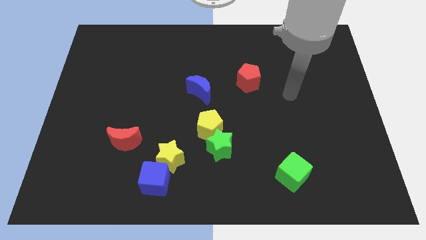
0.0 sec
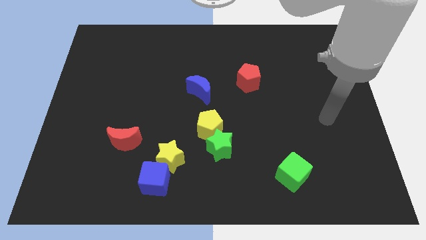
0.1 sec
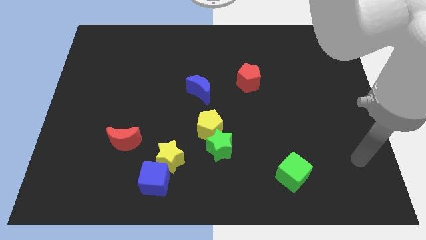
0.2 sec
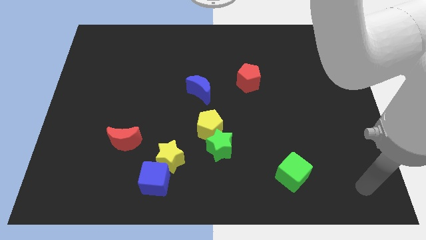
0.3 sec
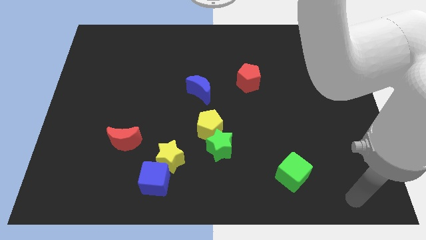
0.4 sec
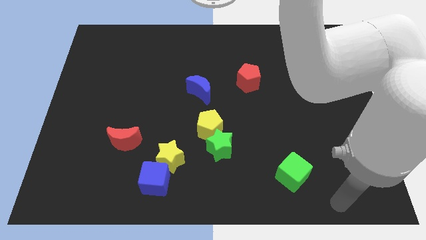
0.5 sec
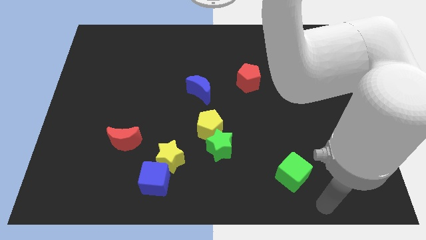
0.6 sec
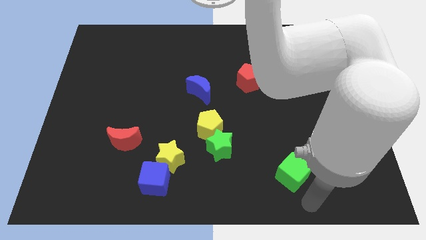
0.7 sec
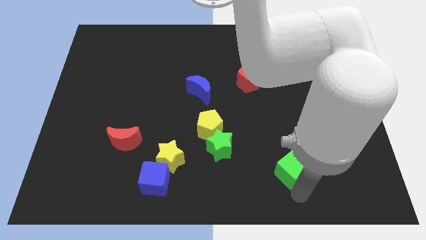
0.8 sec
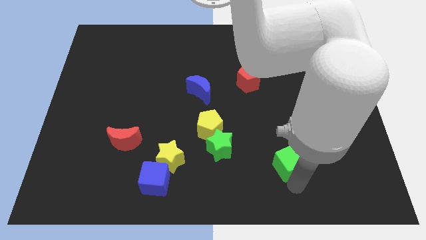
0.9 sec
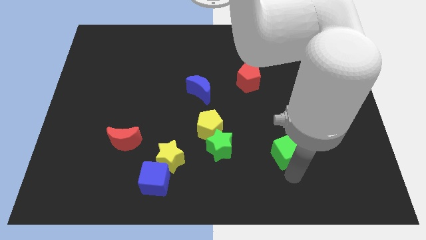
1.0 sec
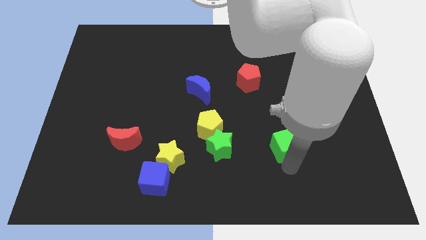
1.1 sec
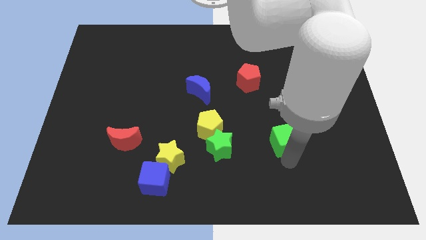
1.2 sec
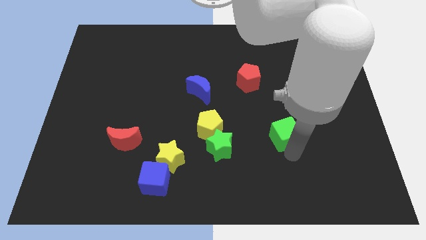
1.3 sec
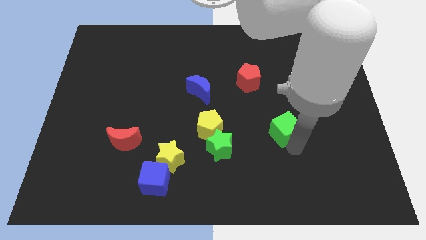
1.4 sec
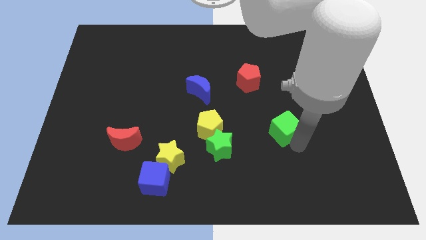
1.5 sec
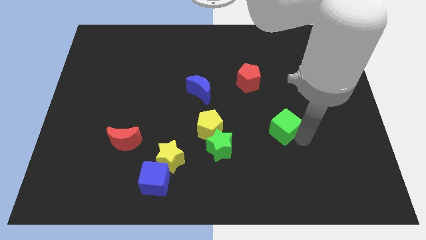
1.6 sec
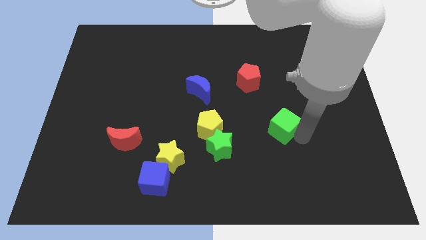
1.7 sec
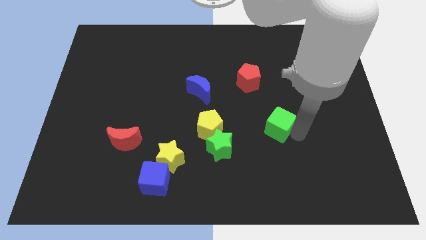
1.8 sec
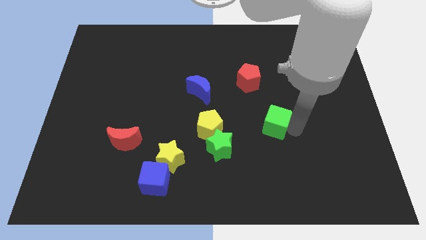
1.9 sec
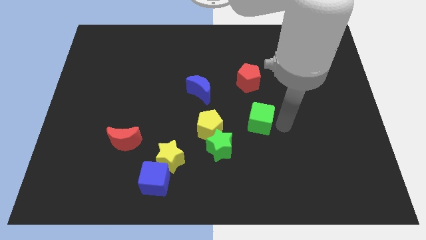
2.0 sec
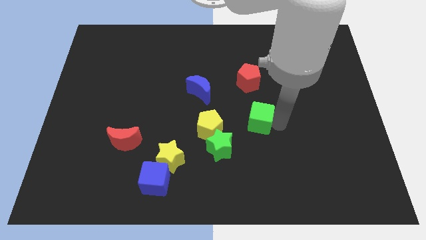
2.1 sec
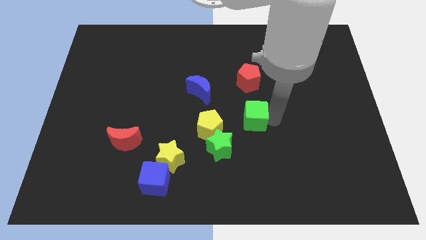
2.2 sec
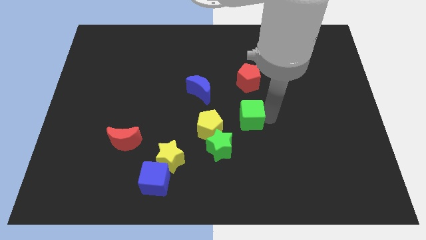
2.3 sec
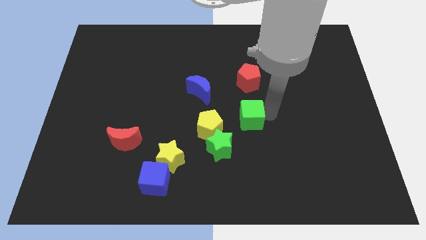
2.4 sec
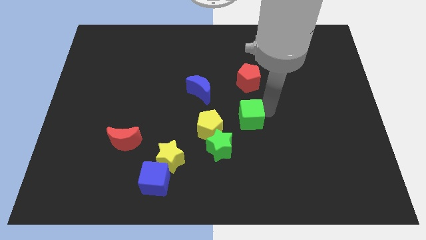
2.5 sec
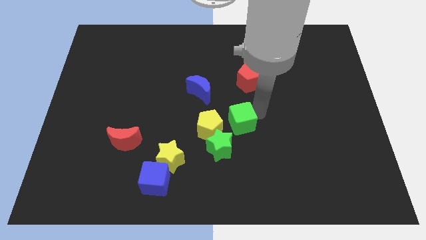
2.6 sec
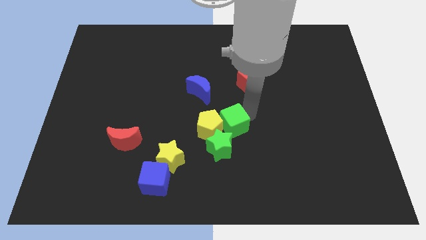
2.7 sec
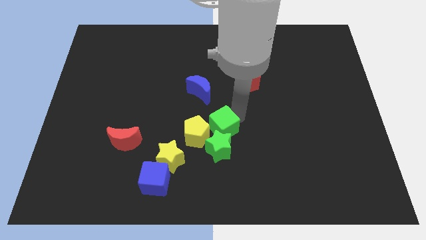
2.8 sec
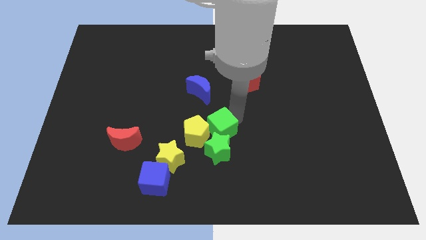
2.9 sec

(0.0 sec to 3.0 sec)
slide the green cube close to the yellow pentagon

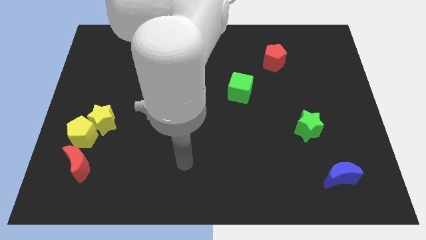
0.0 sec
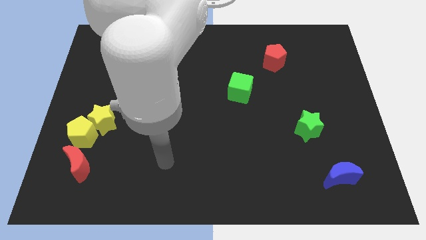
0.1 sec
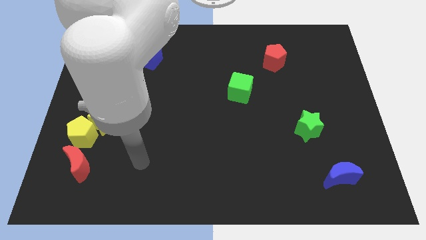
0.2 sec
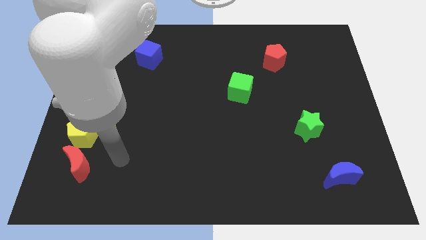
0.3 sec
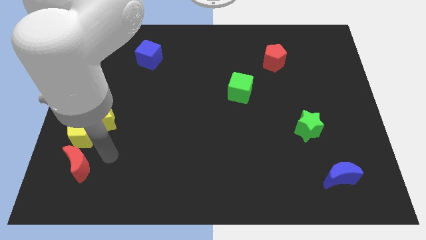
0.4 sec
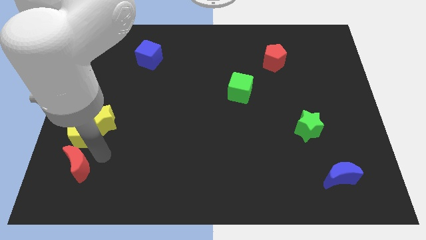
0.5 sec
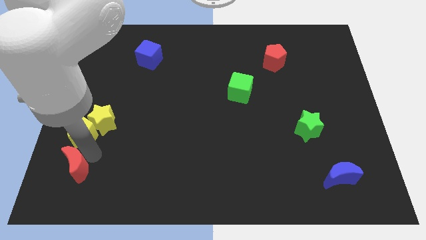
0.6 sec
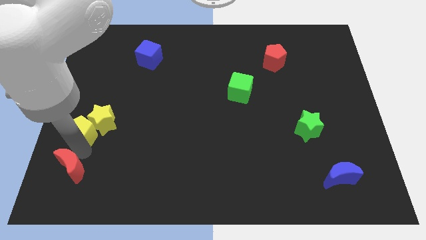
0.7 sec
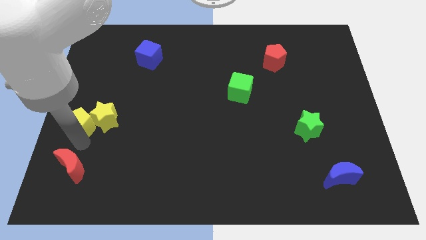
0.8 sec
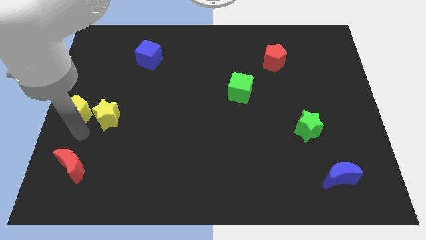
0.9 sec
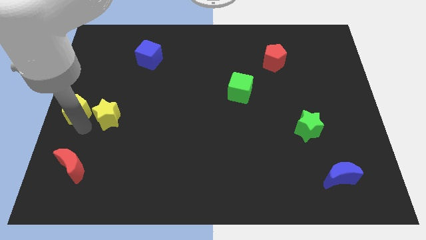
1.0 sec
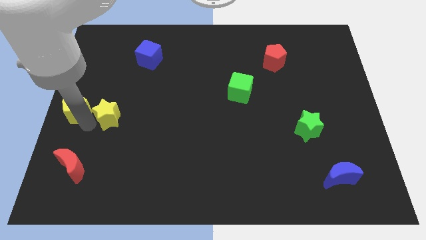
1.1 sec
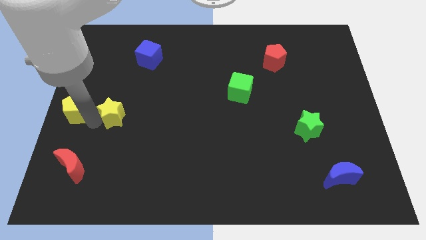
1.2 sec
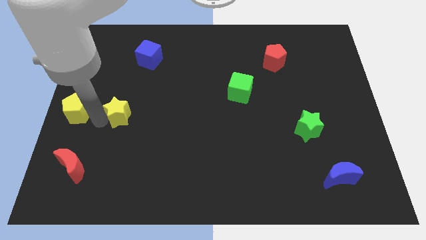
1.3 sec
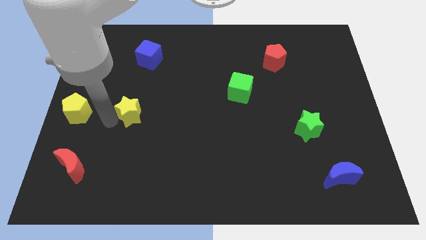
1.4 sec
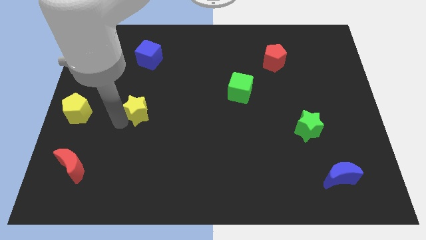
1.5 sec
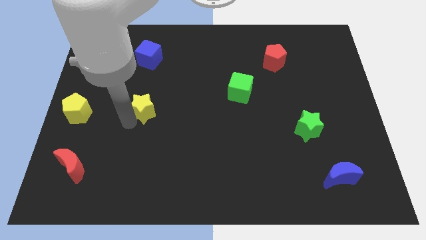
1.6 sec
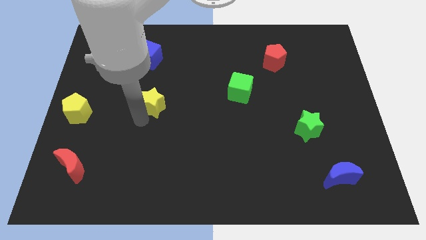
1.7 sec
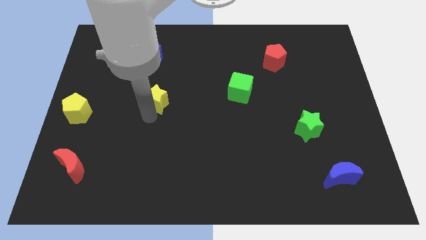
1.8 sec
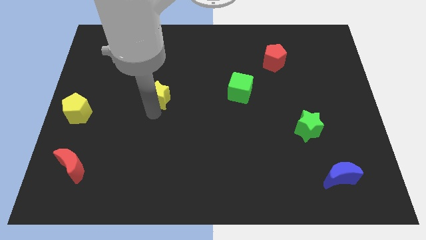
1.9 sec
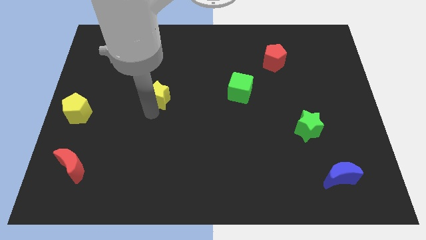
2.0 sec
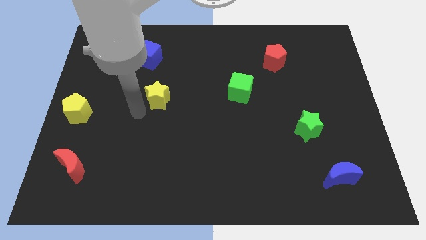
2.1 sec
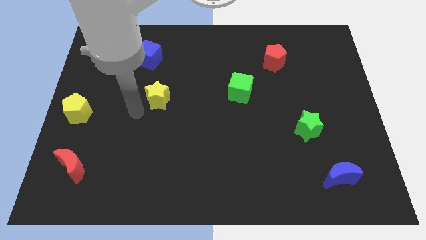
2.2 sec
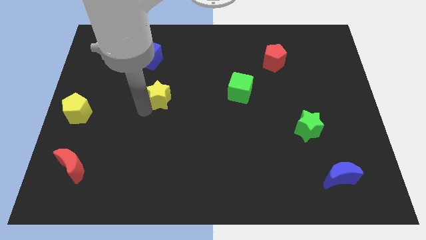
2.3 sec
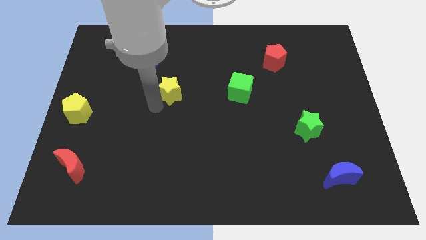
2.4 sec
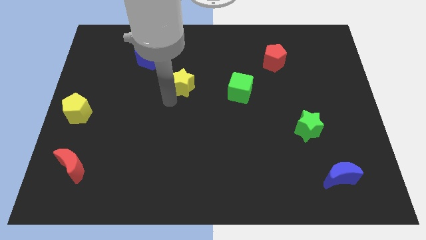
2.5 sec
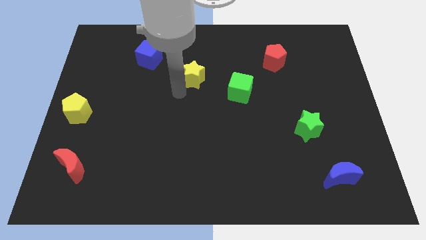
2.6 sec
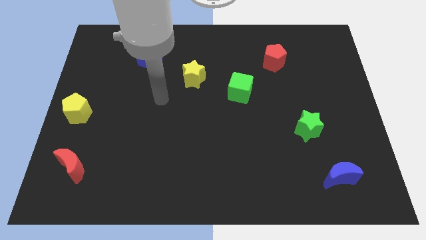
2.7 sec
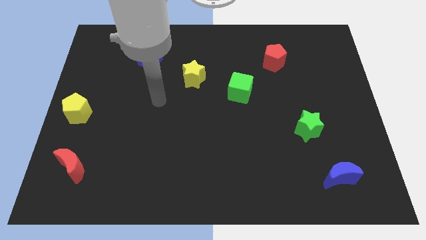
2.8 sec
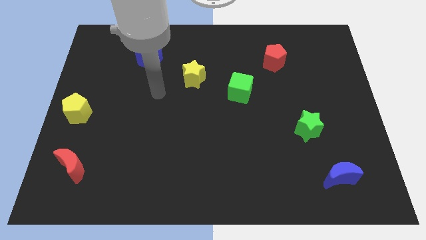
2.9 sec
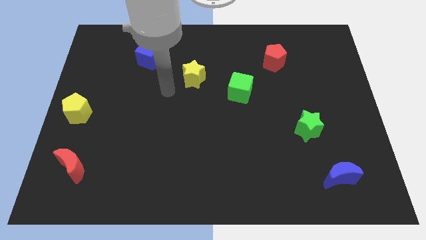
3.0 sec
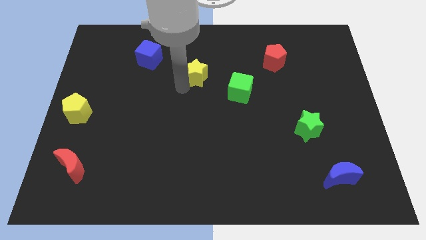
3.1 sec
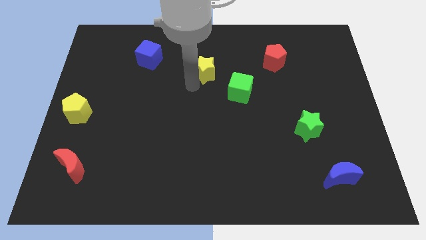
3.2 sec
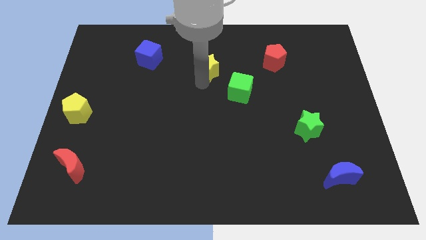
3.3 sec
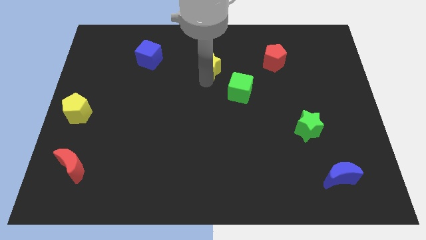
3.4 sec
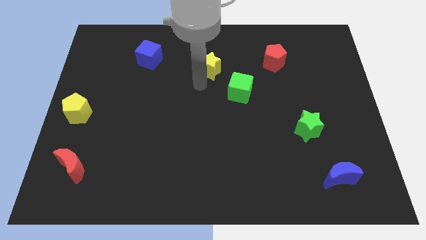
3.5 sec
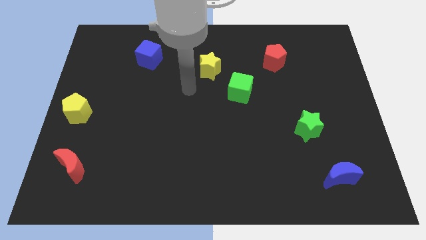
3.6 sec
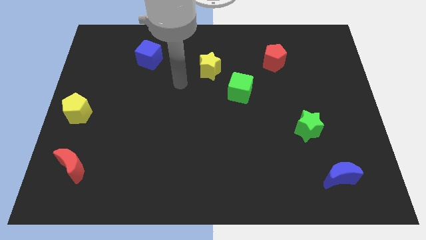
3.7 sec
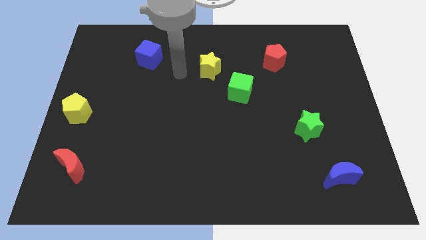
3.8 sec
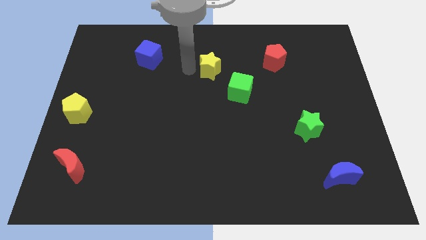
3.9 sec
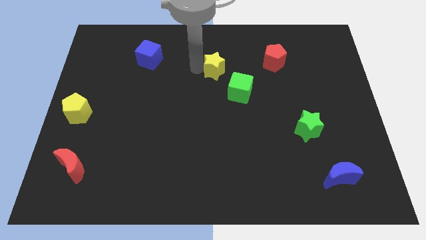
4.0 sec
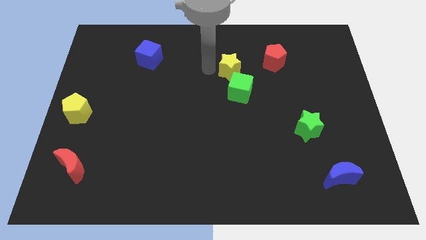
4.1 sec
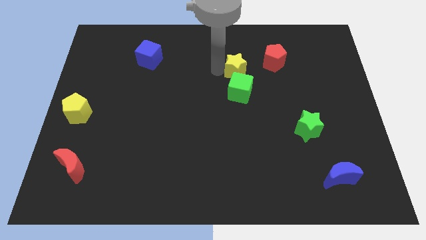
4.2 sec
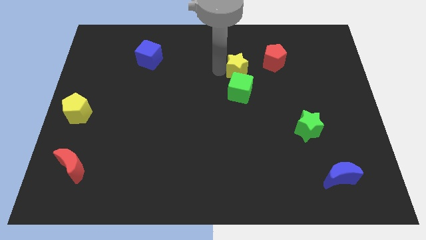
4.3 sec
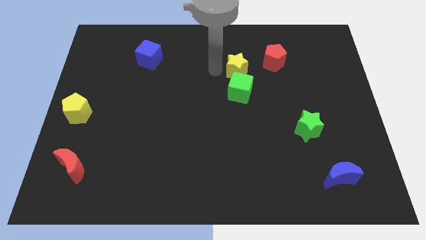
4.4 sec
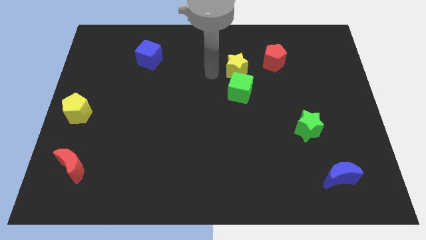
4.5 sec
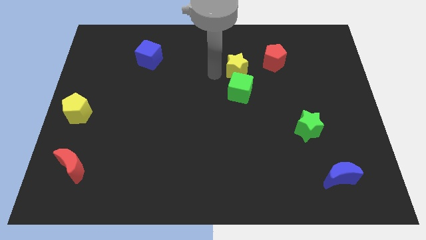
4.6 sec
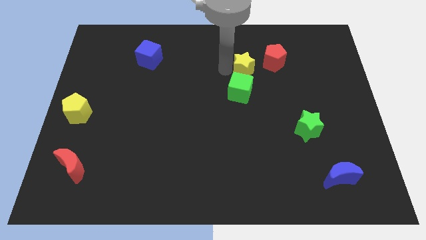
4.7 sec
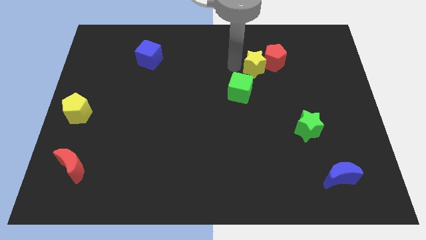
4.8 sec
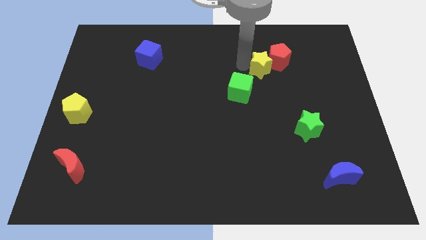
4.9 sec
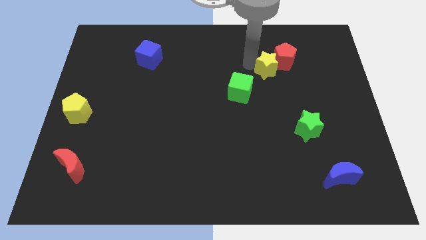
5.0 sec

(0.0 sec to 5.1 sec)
push the yellow star close to the red pentagon

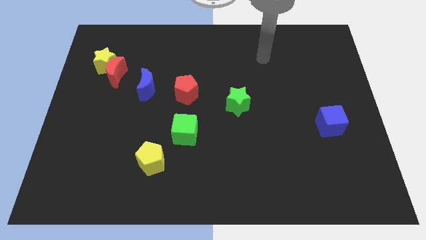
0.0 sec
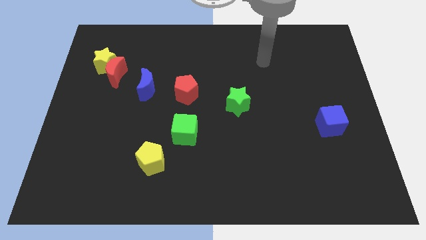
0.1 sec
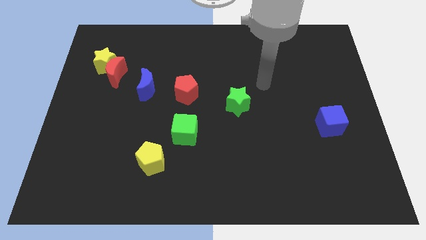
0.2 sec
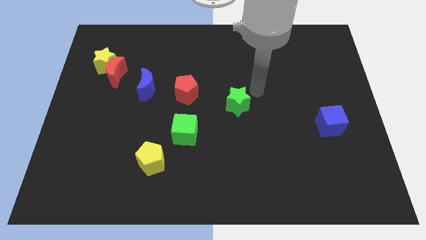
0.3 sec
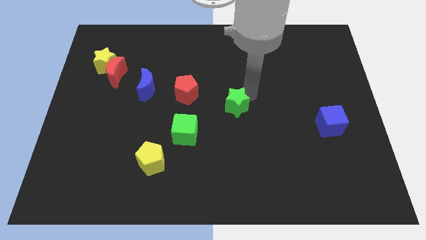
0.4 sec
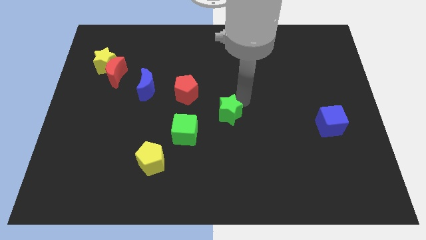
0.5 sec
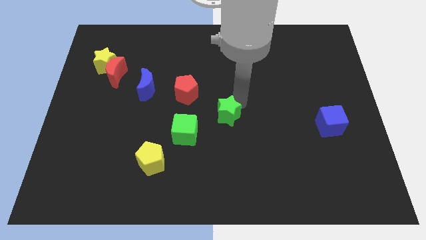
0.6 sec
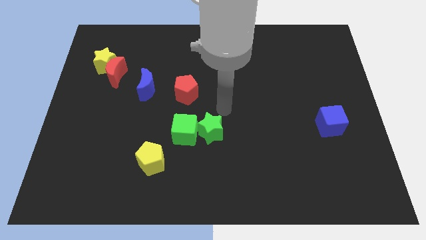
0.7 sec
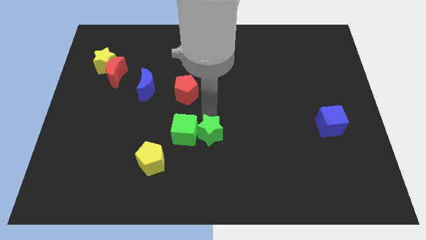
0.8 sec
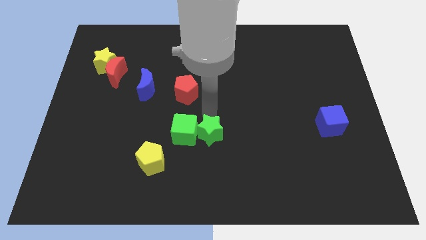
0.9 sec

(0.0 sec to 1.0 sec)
put the green star close to the green cube
